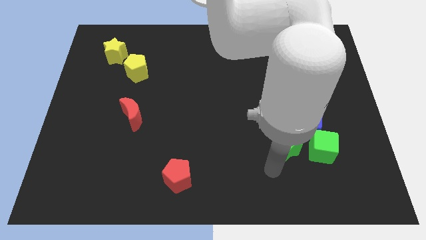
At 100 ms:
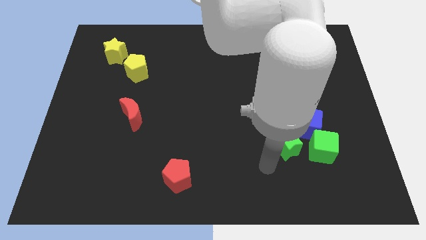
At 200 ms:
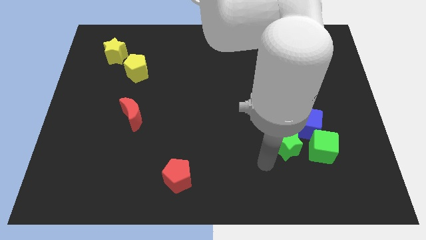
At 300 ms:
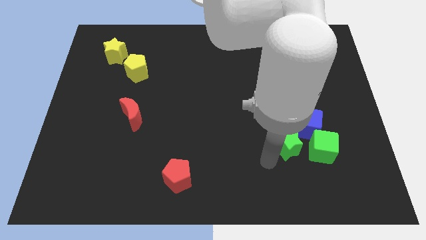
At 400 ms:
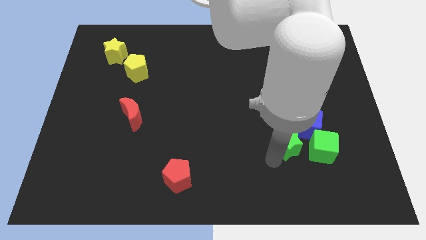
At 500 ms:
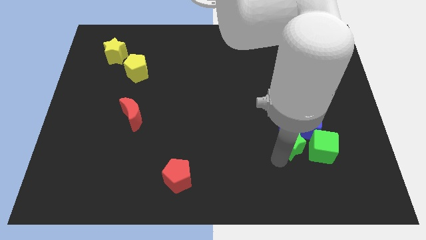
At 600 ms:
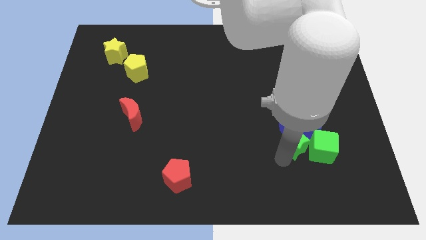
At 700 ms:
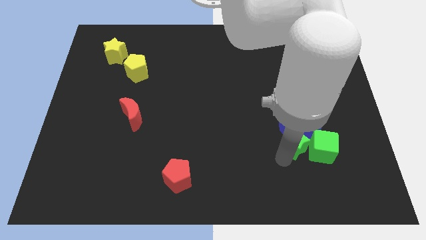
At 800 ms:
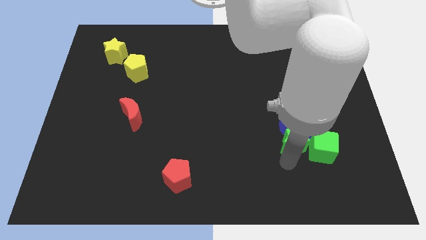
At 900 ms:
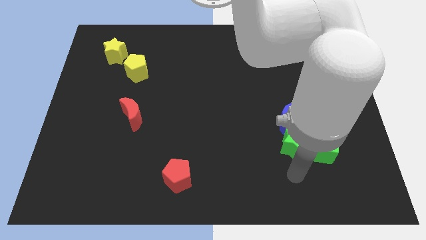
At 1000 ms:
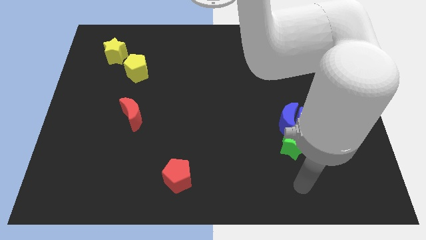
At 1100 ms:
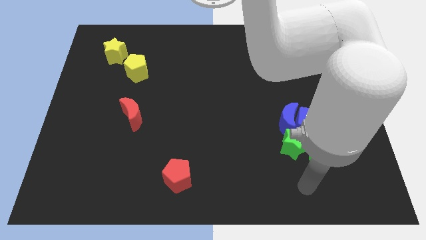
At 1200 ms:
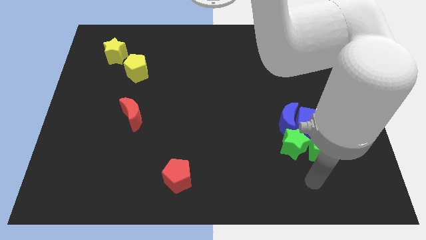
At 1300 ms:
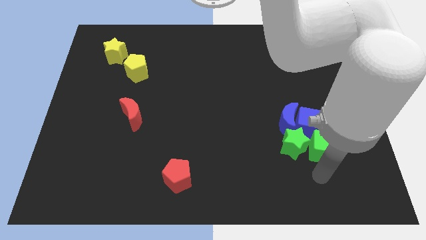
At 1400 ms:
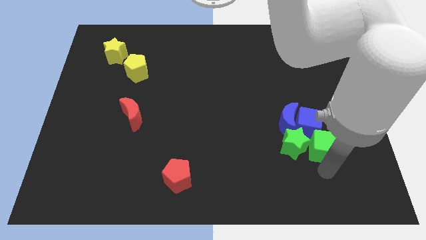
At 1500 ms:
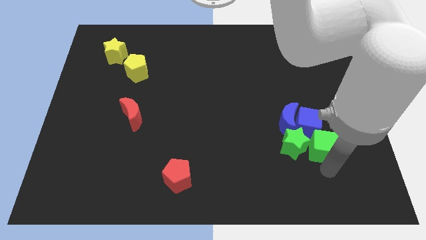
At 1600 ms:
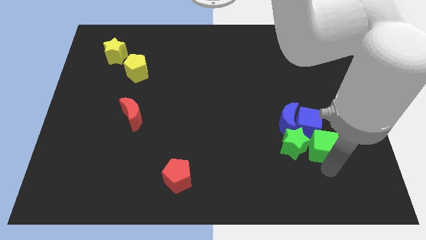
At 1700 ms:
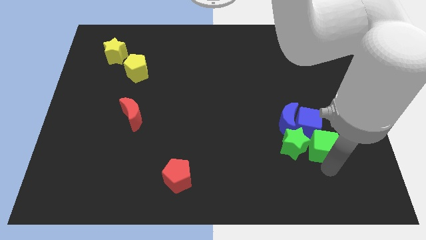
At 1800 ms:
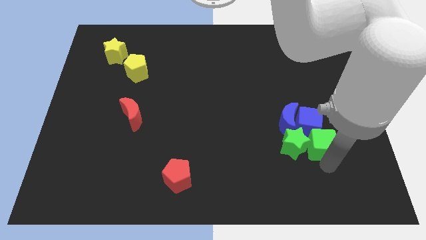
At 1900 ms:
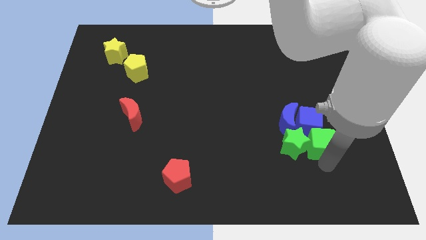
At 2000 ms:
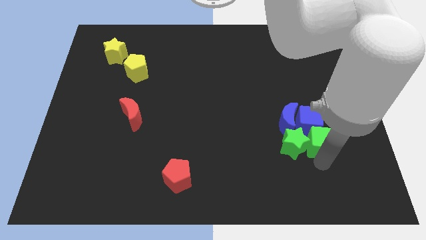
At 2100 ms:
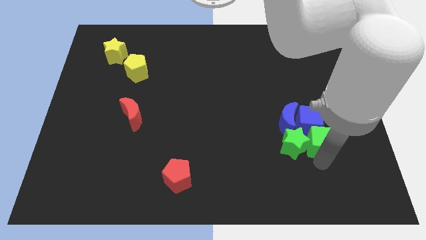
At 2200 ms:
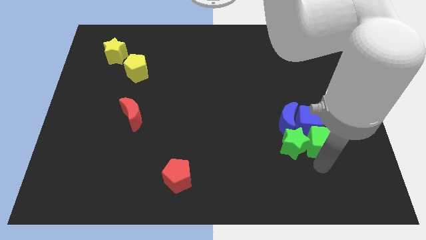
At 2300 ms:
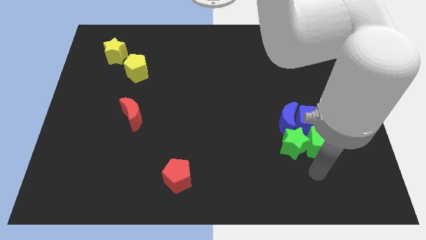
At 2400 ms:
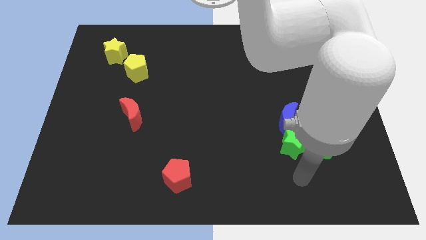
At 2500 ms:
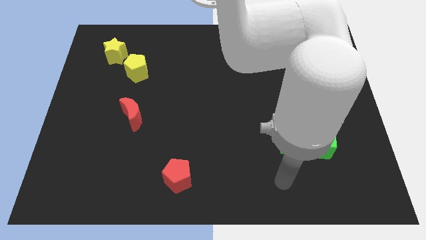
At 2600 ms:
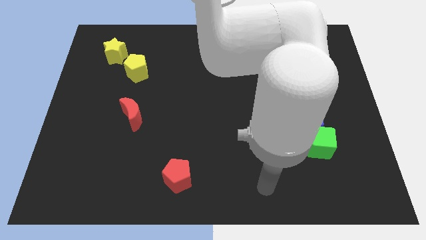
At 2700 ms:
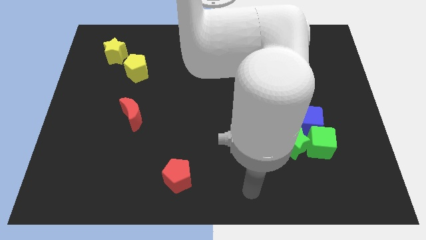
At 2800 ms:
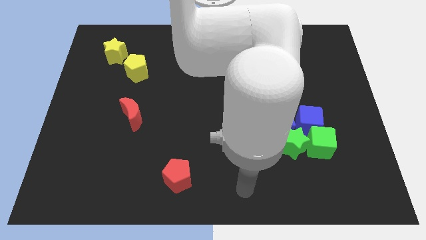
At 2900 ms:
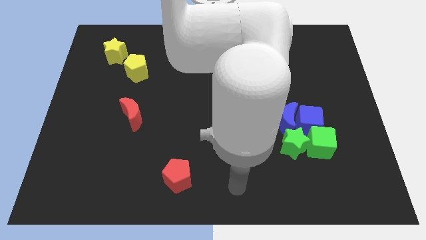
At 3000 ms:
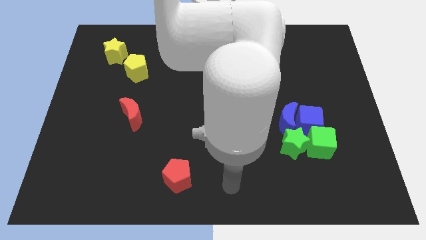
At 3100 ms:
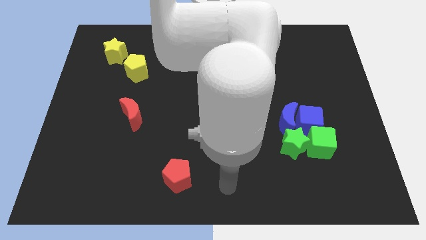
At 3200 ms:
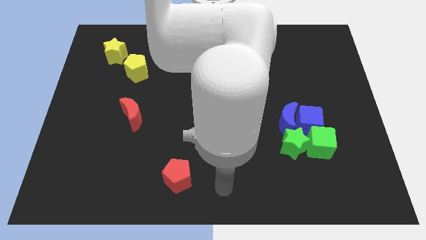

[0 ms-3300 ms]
adjust the green blocks vertically below the blue blocks

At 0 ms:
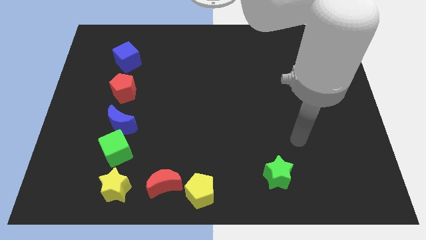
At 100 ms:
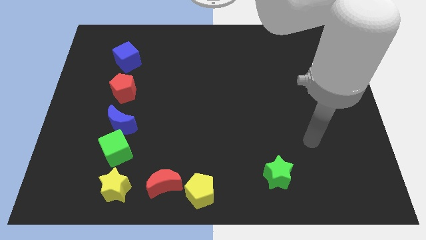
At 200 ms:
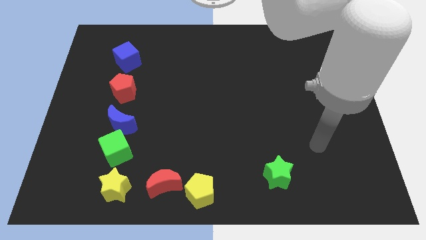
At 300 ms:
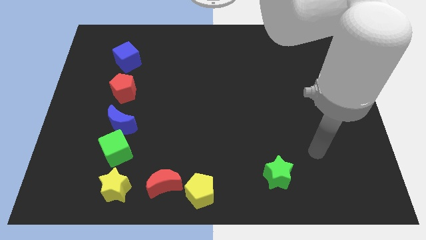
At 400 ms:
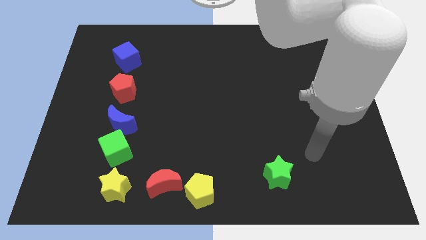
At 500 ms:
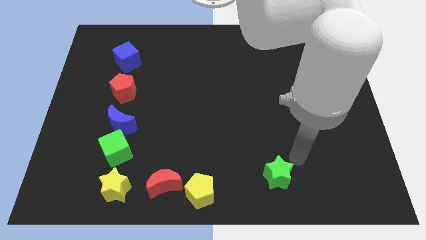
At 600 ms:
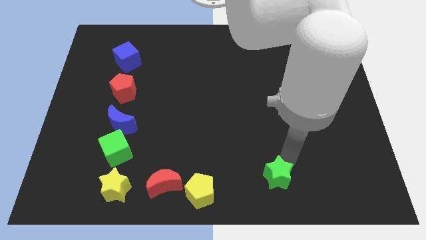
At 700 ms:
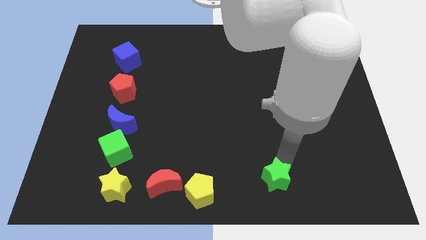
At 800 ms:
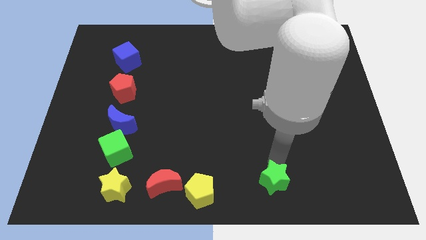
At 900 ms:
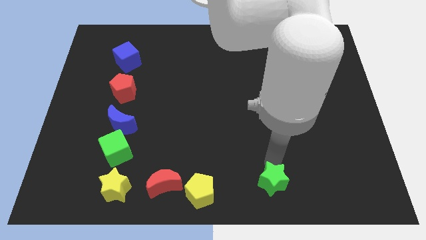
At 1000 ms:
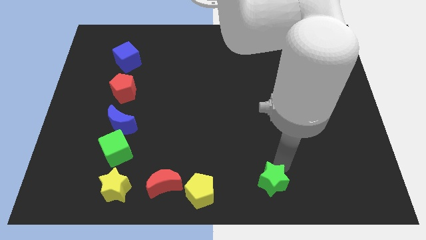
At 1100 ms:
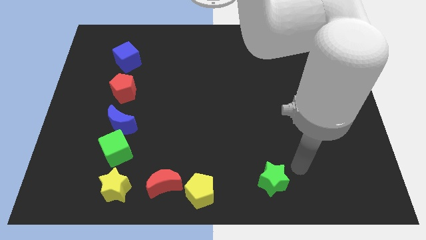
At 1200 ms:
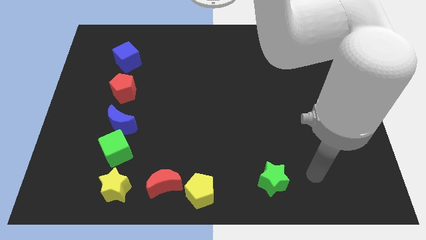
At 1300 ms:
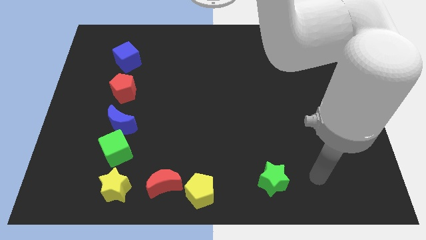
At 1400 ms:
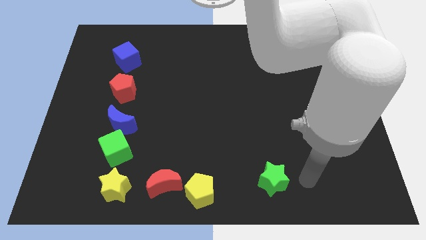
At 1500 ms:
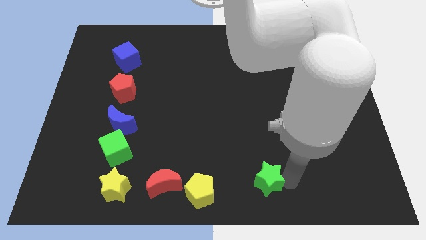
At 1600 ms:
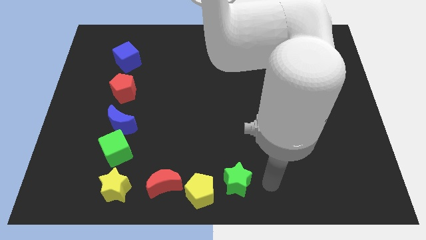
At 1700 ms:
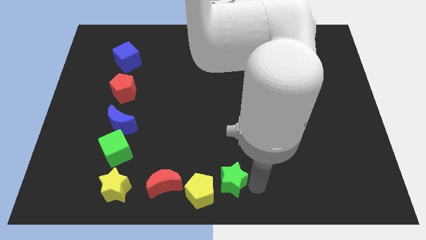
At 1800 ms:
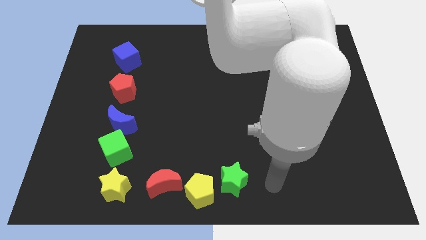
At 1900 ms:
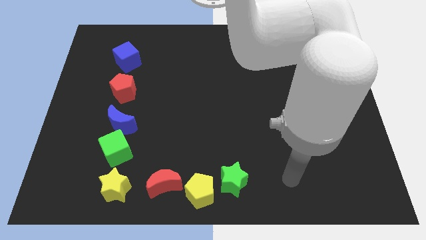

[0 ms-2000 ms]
place the green star on the right side of the yellow pentagon

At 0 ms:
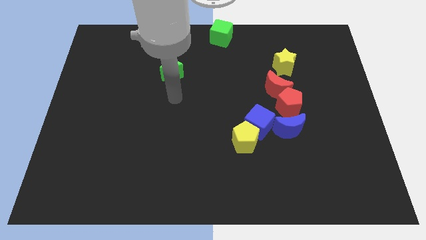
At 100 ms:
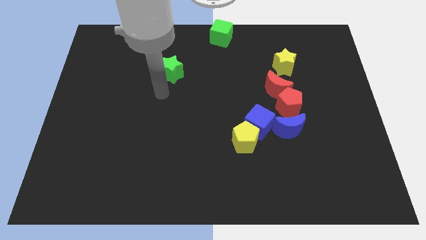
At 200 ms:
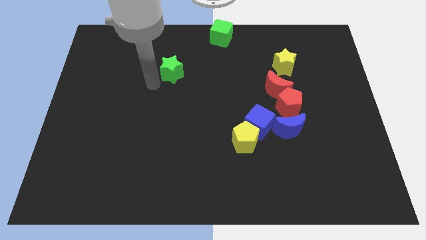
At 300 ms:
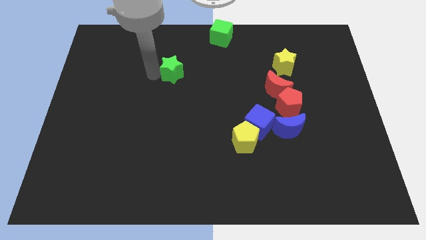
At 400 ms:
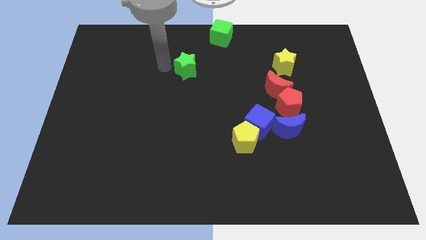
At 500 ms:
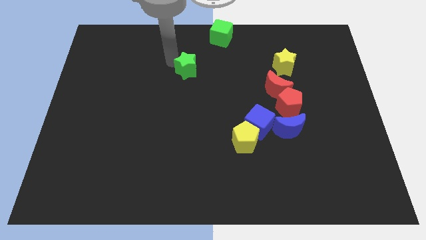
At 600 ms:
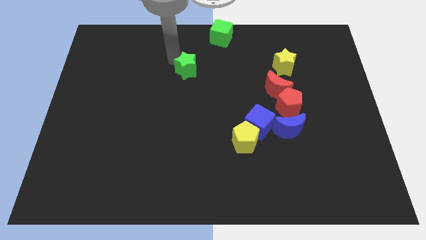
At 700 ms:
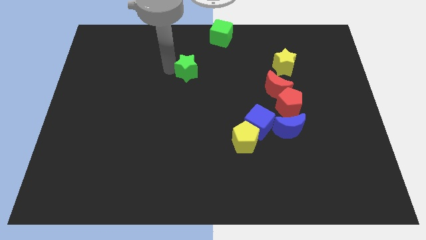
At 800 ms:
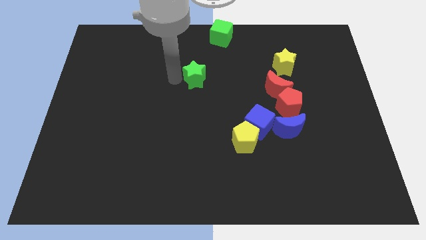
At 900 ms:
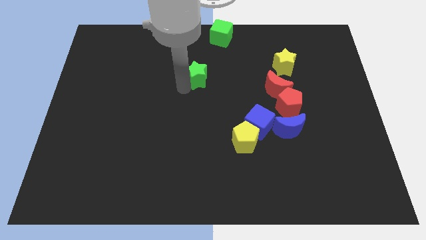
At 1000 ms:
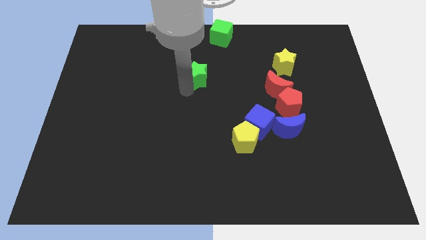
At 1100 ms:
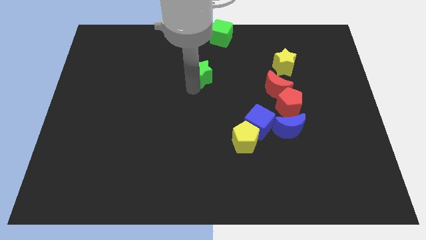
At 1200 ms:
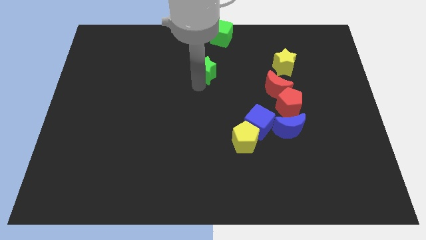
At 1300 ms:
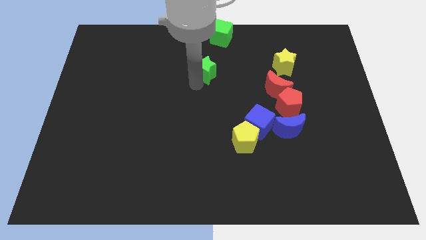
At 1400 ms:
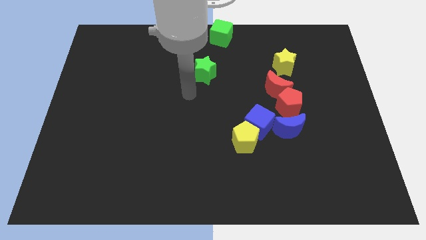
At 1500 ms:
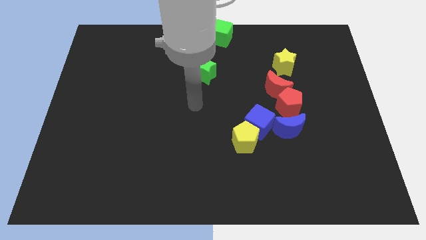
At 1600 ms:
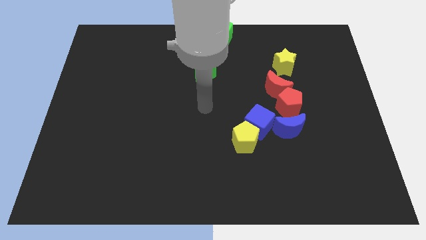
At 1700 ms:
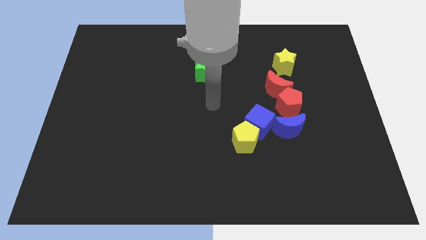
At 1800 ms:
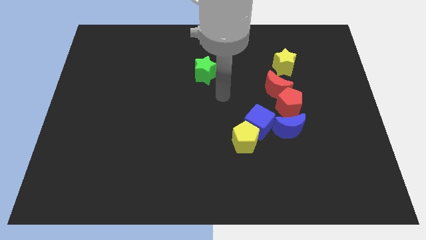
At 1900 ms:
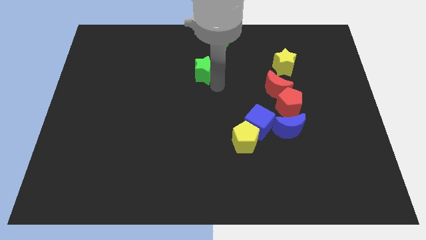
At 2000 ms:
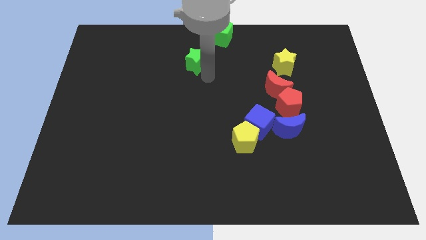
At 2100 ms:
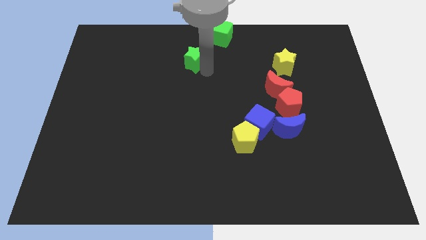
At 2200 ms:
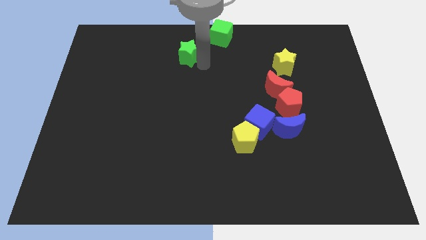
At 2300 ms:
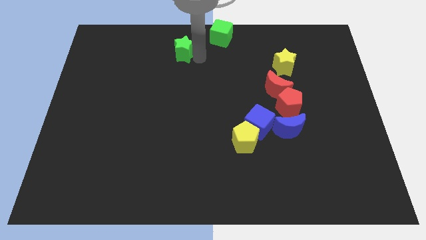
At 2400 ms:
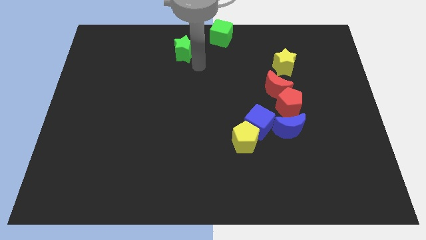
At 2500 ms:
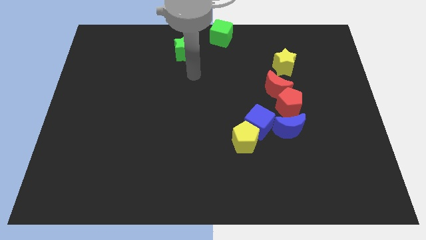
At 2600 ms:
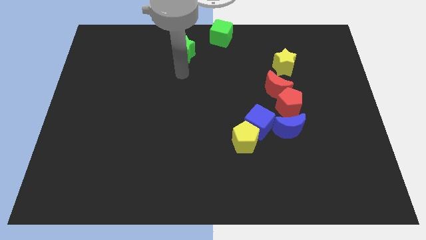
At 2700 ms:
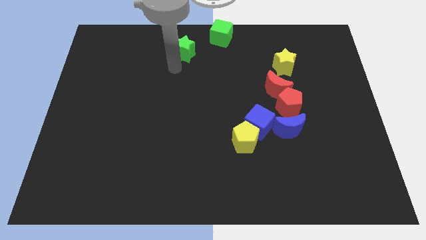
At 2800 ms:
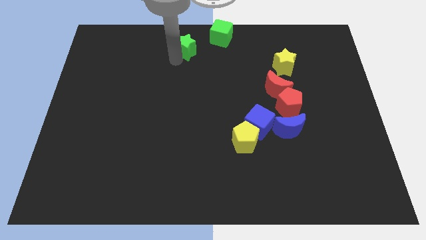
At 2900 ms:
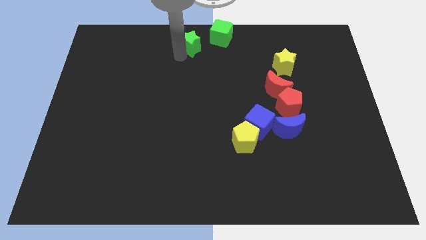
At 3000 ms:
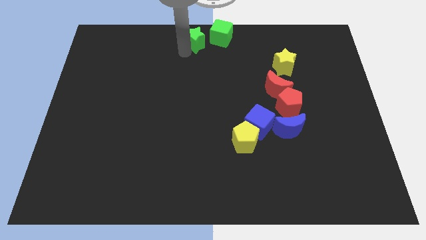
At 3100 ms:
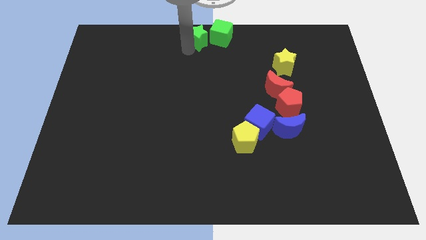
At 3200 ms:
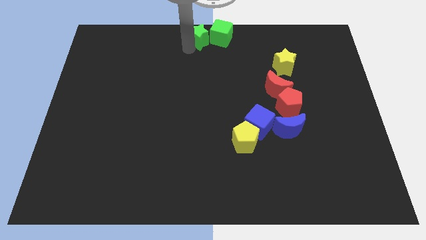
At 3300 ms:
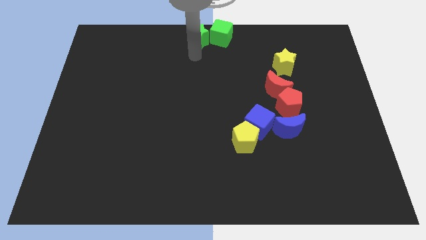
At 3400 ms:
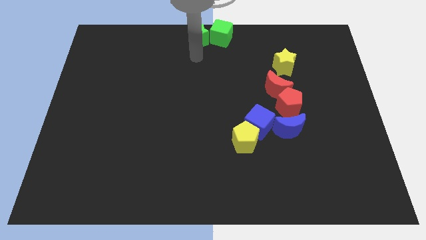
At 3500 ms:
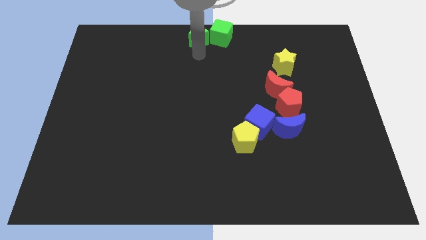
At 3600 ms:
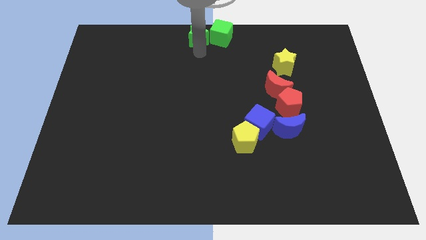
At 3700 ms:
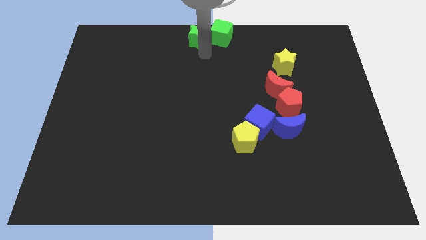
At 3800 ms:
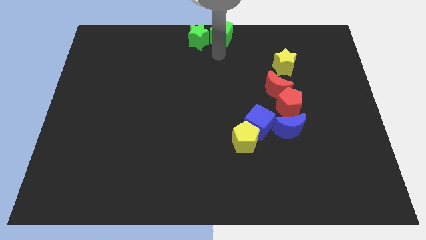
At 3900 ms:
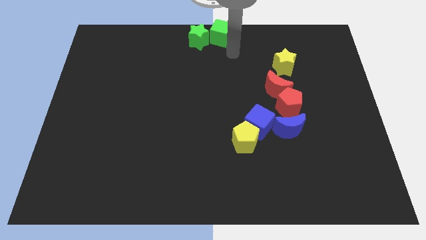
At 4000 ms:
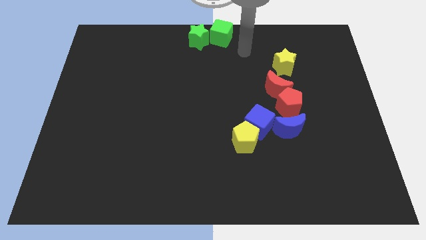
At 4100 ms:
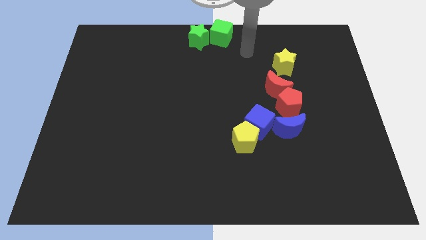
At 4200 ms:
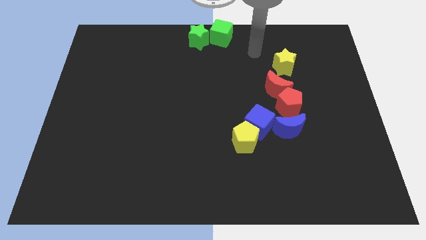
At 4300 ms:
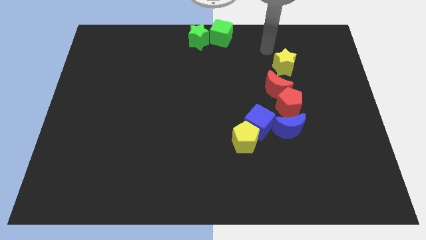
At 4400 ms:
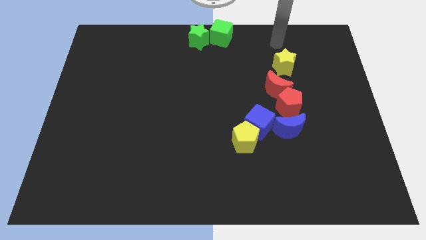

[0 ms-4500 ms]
place the green star the top center
